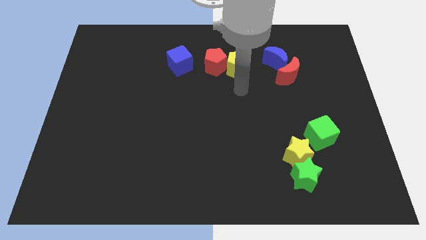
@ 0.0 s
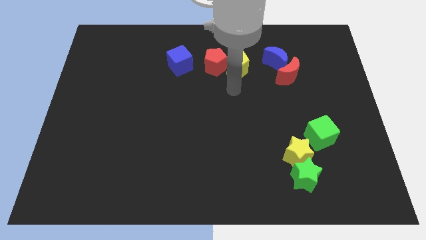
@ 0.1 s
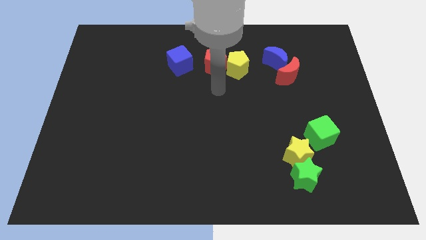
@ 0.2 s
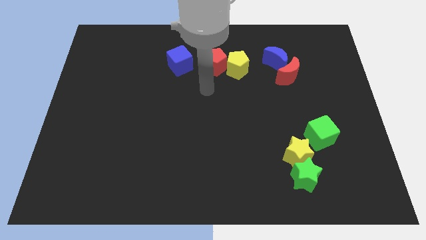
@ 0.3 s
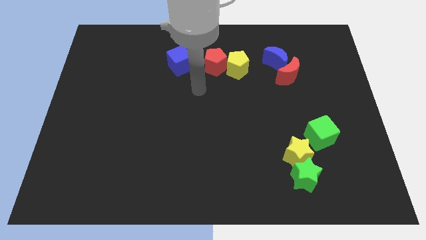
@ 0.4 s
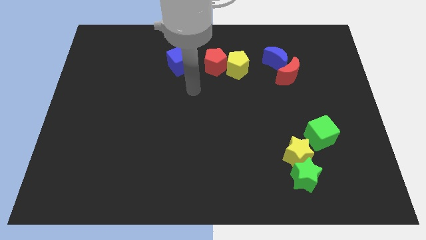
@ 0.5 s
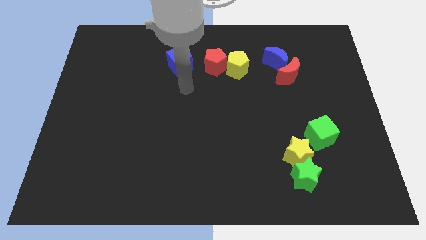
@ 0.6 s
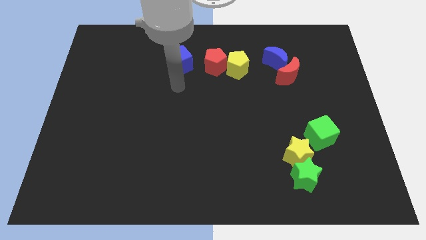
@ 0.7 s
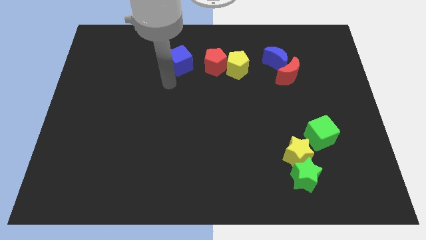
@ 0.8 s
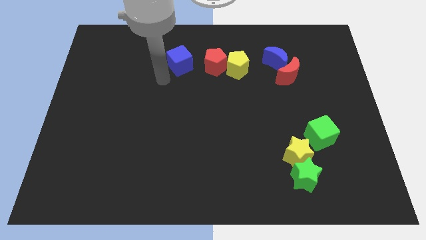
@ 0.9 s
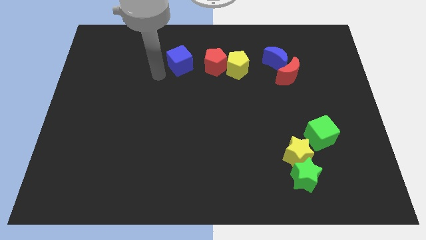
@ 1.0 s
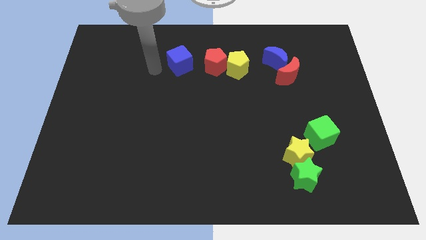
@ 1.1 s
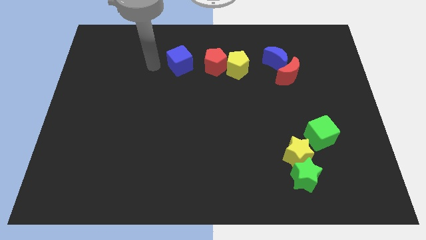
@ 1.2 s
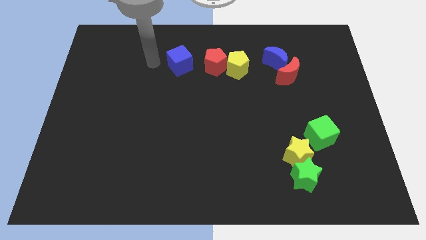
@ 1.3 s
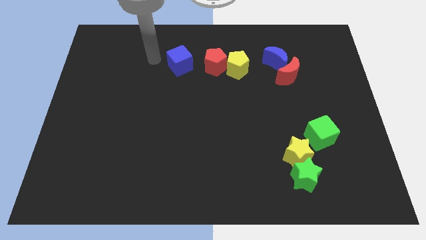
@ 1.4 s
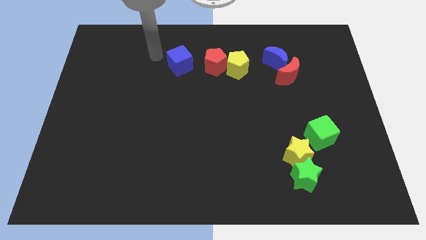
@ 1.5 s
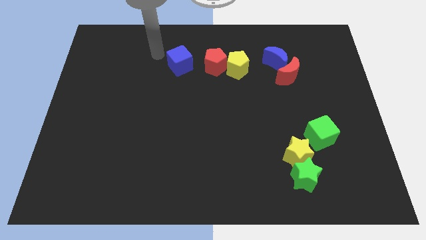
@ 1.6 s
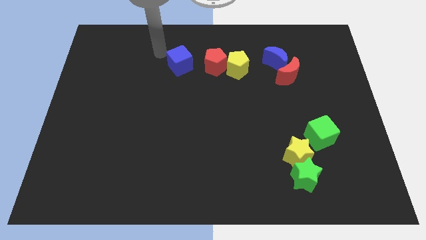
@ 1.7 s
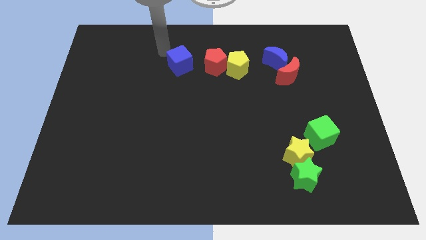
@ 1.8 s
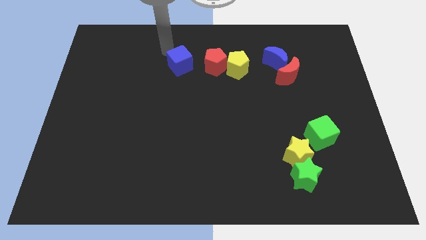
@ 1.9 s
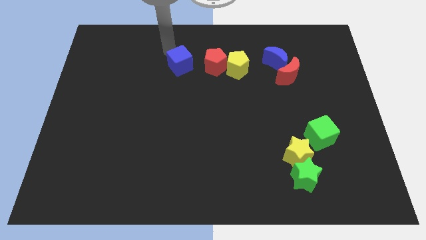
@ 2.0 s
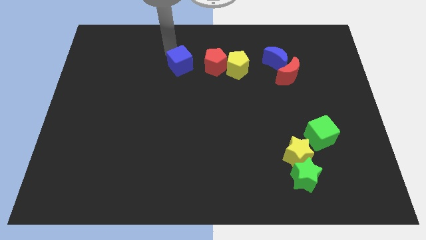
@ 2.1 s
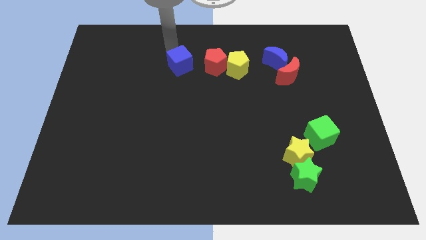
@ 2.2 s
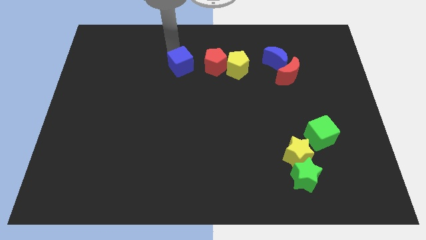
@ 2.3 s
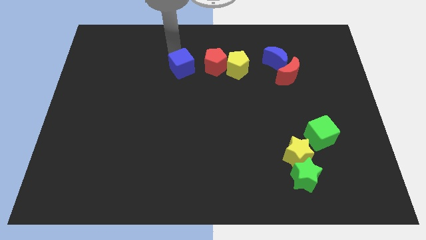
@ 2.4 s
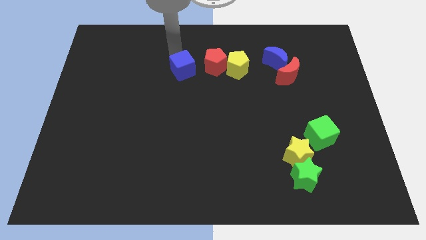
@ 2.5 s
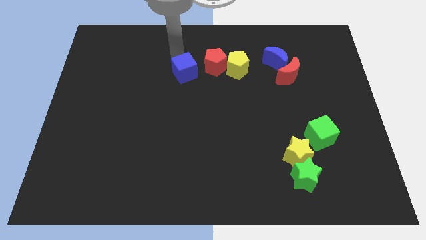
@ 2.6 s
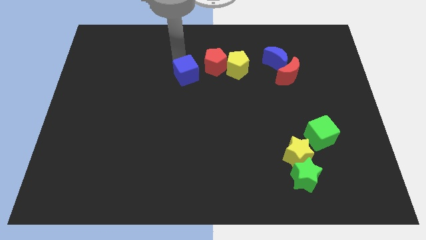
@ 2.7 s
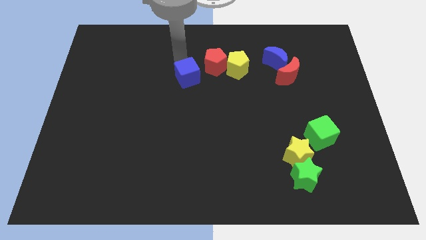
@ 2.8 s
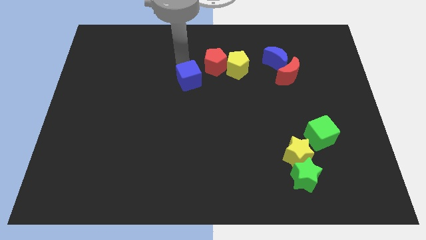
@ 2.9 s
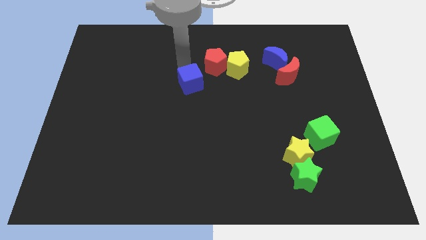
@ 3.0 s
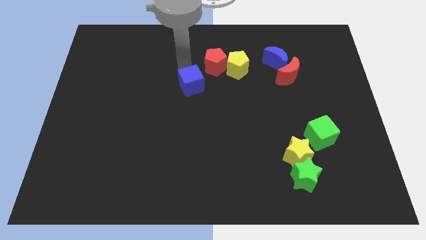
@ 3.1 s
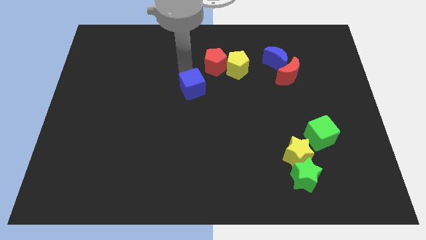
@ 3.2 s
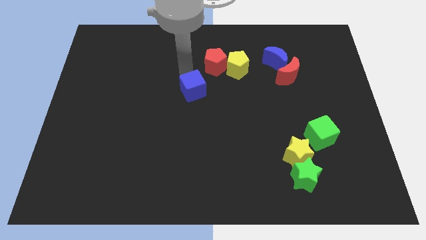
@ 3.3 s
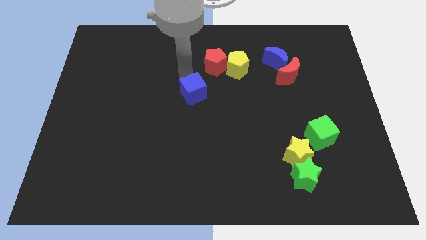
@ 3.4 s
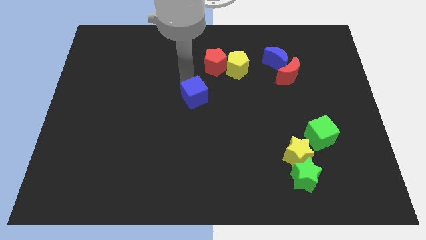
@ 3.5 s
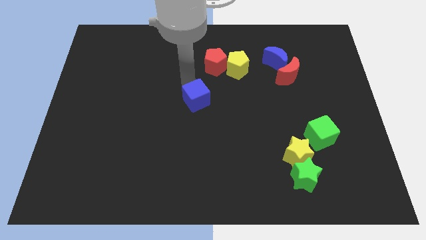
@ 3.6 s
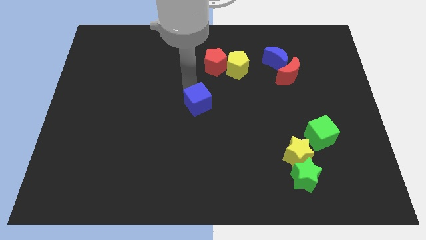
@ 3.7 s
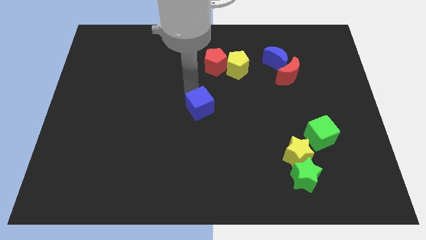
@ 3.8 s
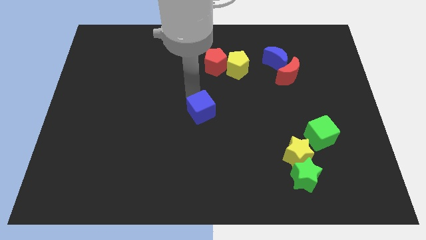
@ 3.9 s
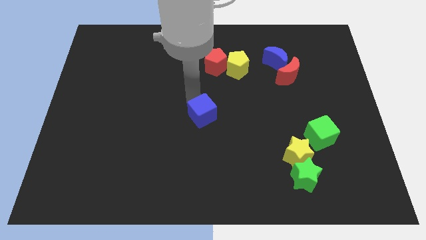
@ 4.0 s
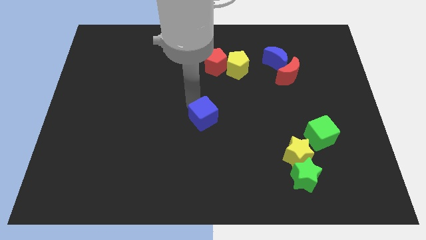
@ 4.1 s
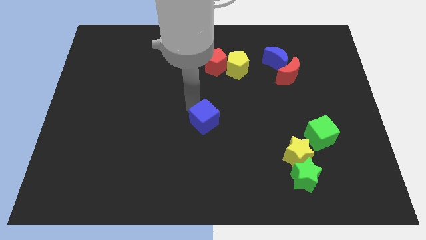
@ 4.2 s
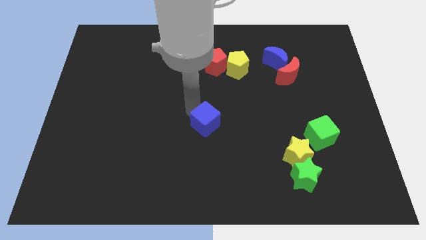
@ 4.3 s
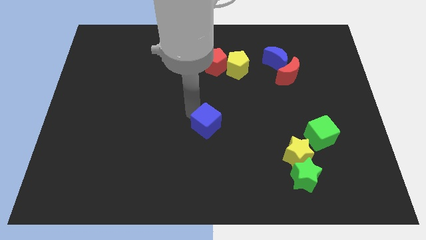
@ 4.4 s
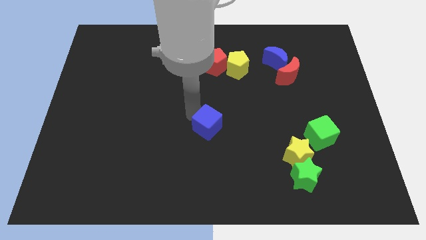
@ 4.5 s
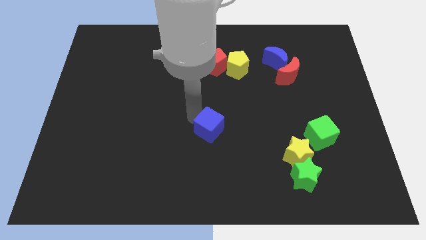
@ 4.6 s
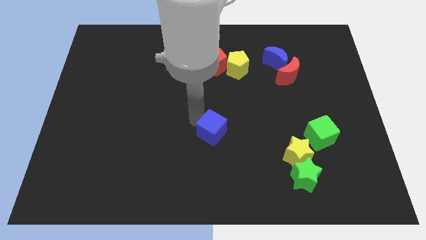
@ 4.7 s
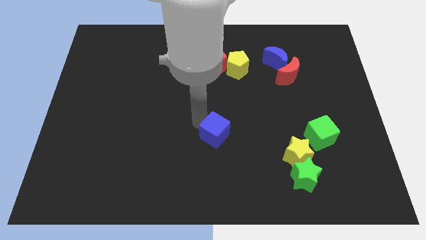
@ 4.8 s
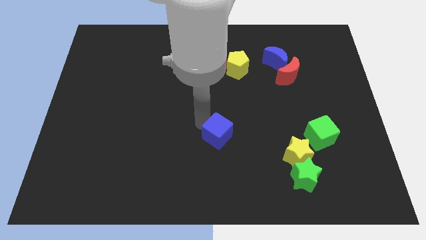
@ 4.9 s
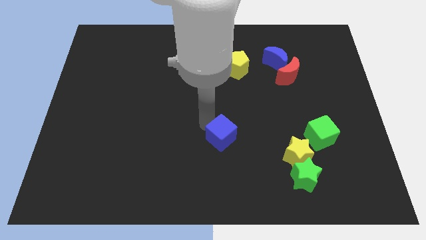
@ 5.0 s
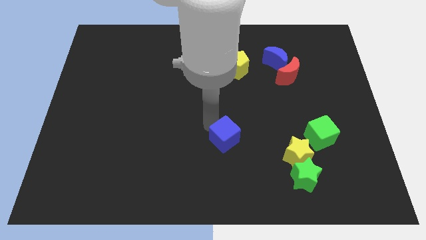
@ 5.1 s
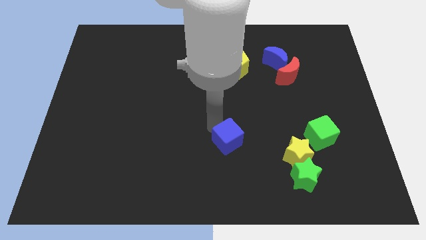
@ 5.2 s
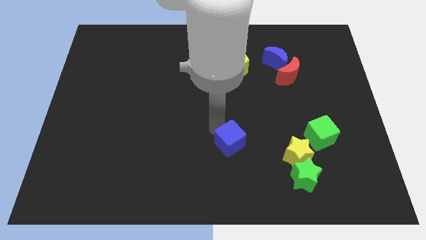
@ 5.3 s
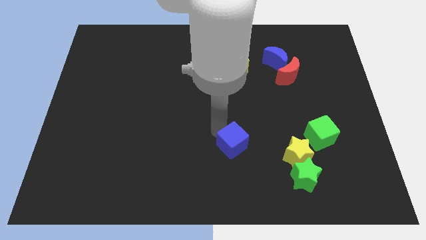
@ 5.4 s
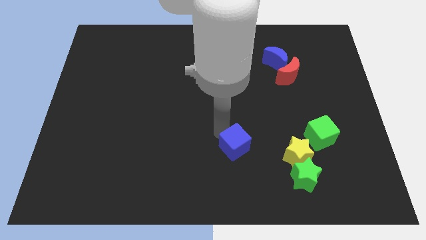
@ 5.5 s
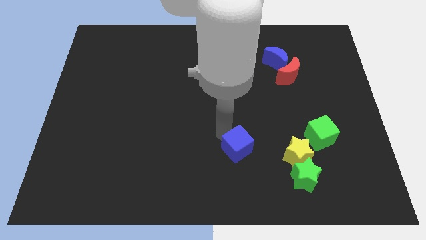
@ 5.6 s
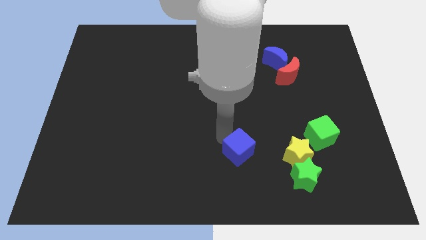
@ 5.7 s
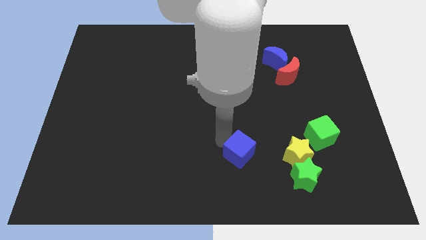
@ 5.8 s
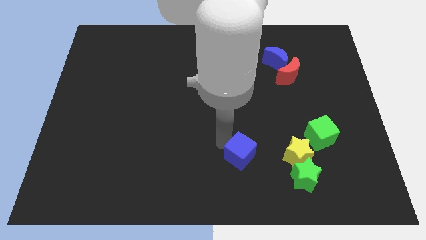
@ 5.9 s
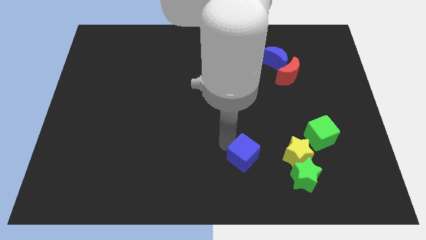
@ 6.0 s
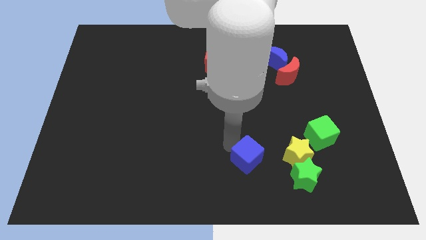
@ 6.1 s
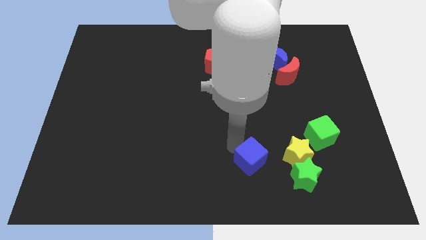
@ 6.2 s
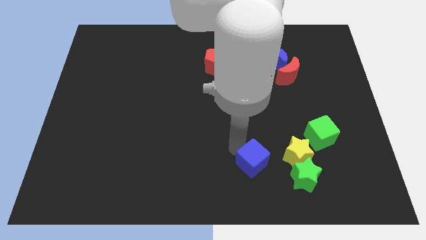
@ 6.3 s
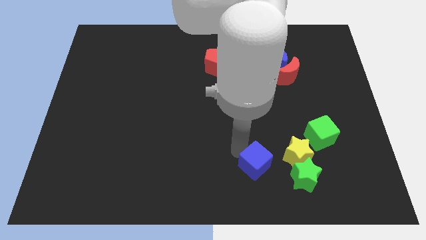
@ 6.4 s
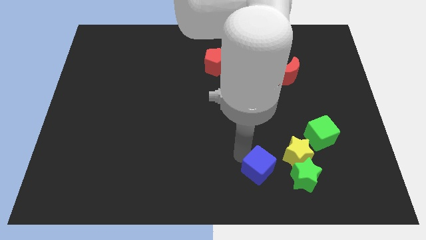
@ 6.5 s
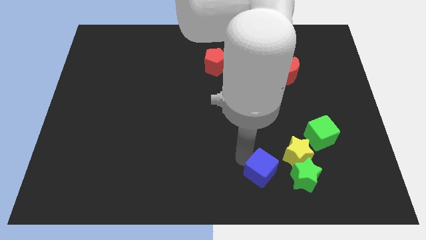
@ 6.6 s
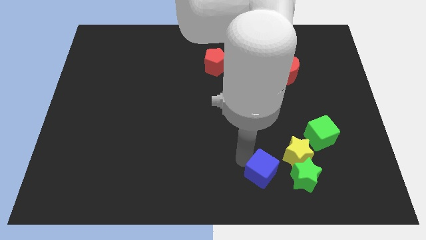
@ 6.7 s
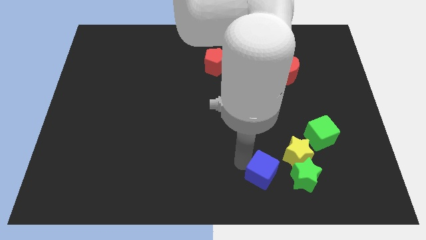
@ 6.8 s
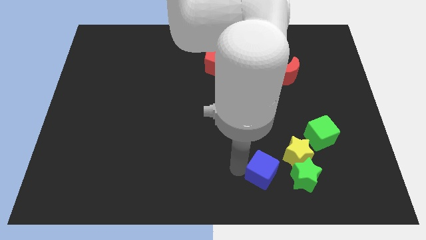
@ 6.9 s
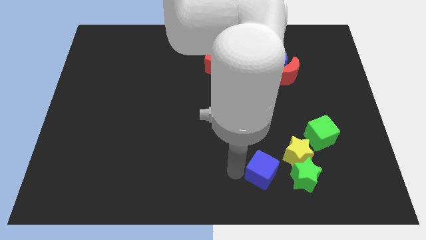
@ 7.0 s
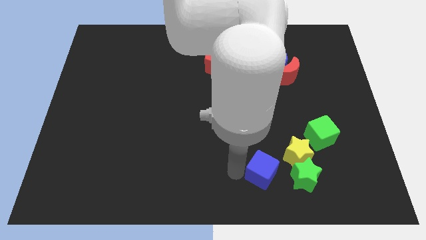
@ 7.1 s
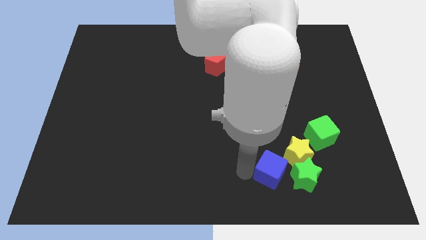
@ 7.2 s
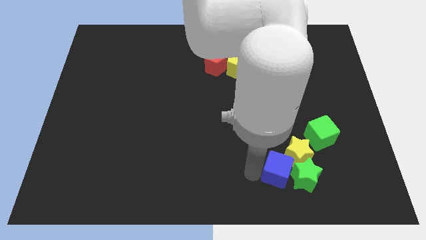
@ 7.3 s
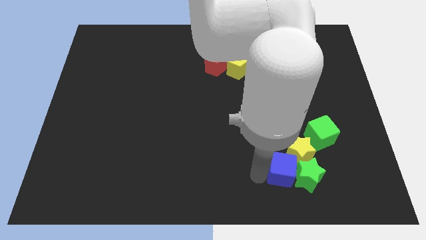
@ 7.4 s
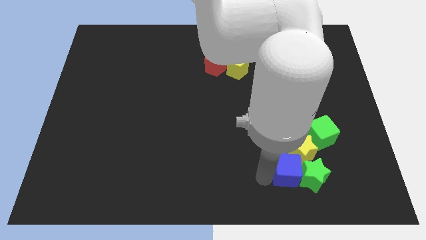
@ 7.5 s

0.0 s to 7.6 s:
slide the blue cube next to the green star

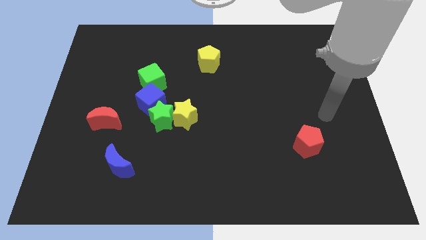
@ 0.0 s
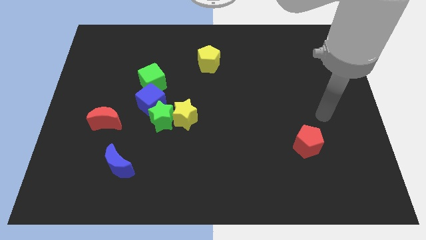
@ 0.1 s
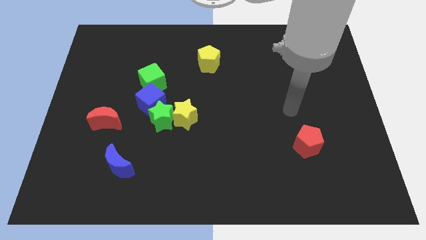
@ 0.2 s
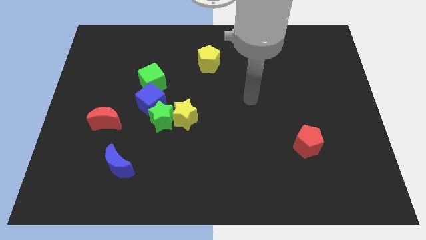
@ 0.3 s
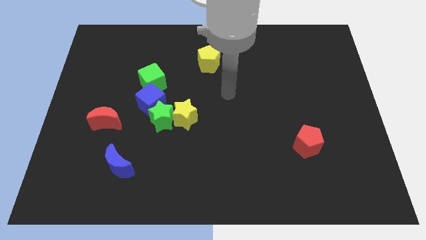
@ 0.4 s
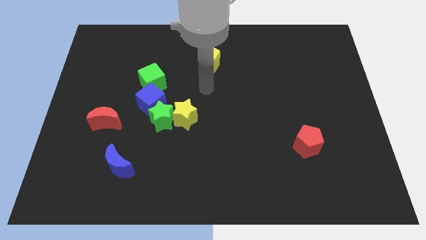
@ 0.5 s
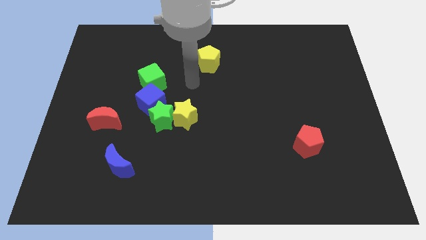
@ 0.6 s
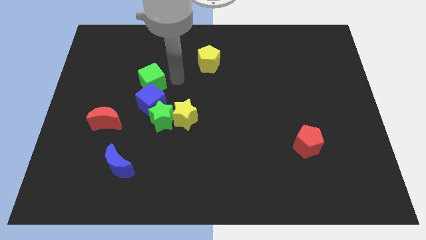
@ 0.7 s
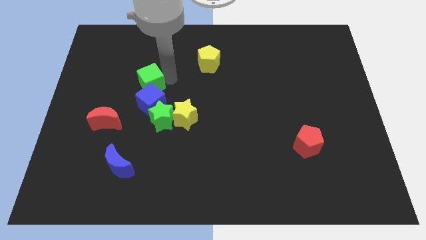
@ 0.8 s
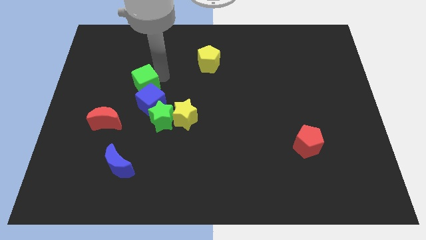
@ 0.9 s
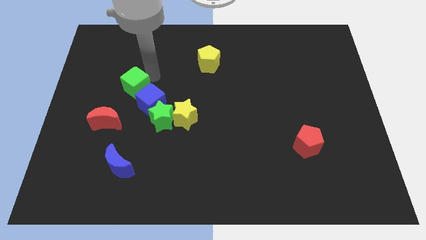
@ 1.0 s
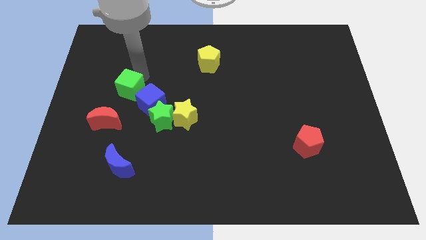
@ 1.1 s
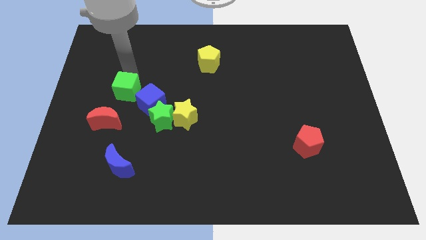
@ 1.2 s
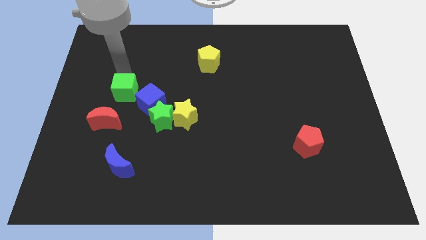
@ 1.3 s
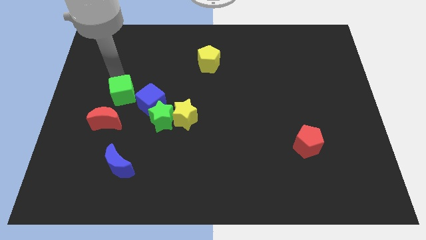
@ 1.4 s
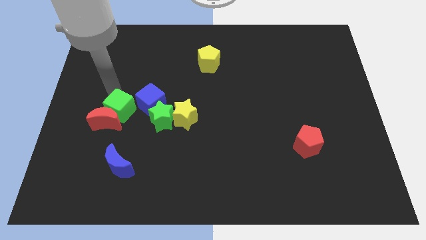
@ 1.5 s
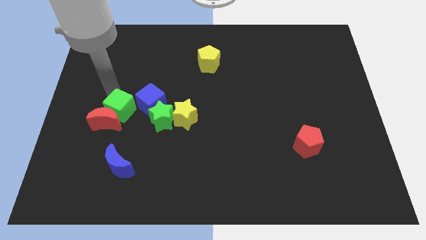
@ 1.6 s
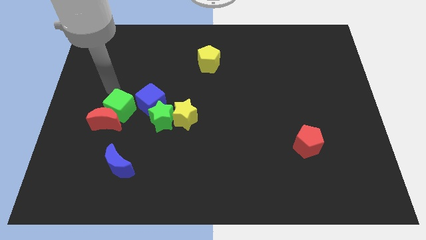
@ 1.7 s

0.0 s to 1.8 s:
put the green cube close to the red moon
